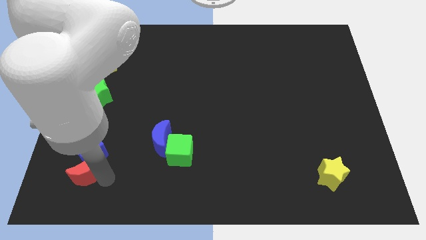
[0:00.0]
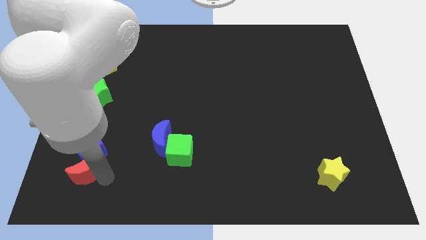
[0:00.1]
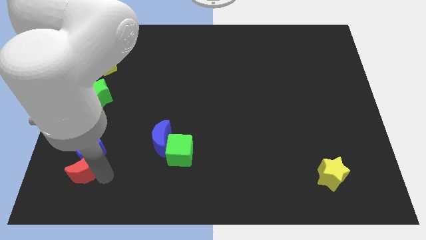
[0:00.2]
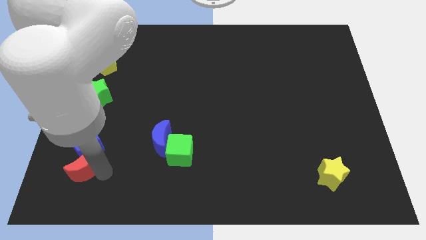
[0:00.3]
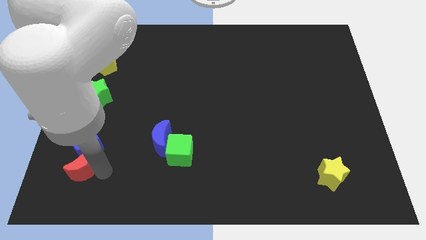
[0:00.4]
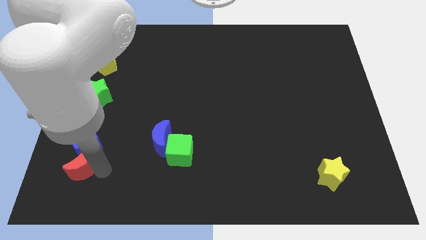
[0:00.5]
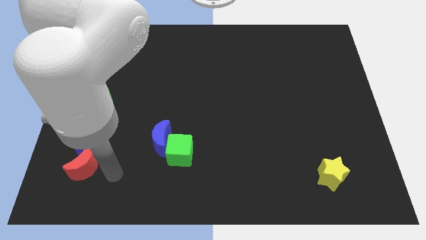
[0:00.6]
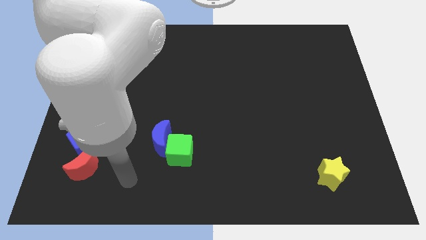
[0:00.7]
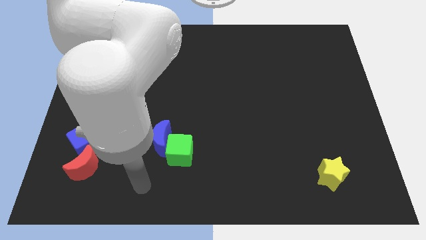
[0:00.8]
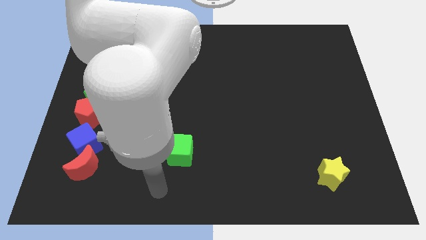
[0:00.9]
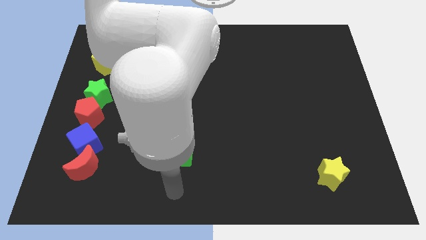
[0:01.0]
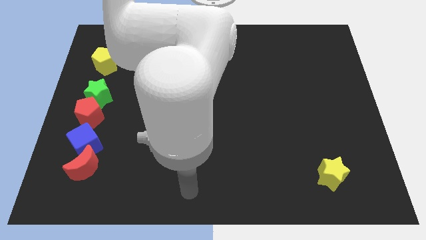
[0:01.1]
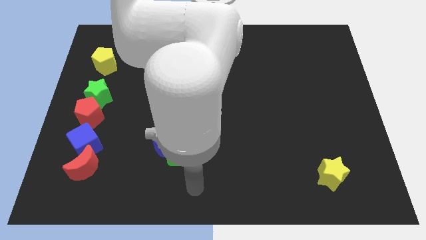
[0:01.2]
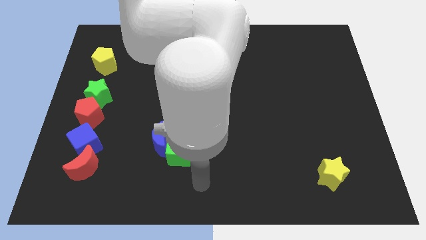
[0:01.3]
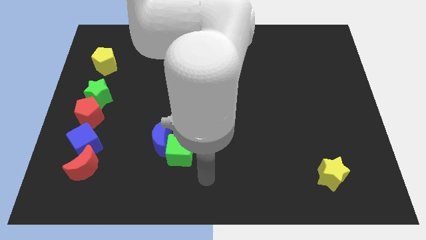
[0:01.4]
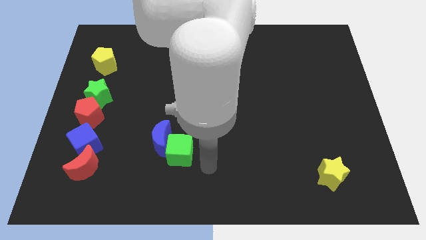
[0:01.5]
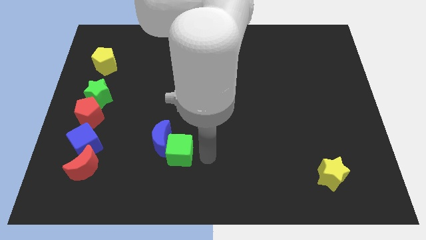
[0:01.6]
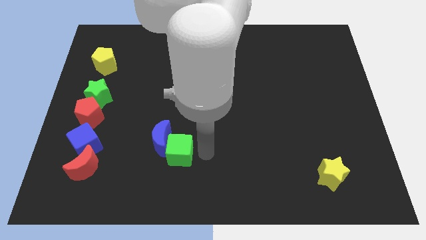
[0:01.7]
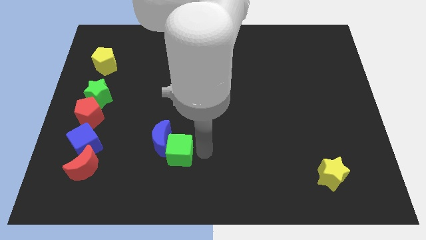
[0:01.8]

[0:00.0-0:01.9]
place the arm to the right of the green cube

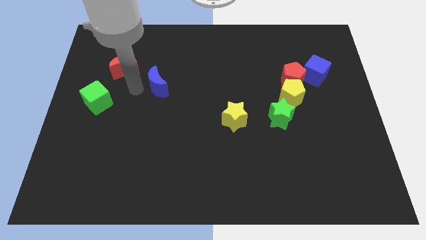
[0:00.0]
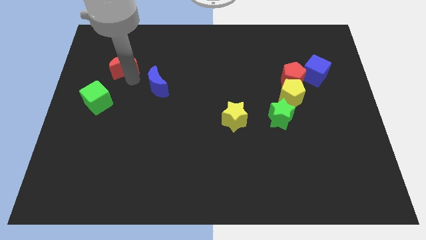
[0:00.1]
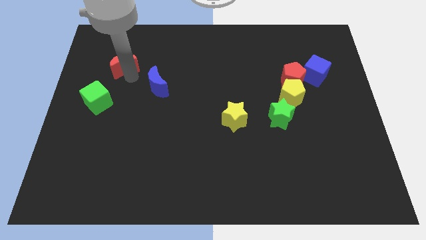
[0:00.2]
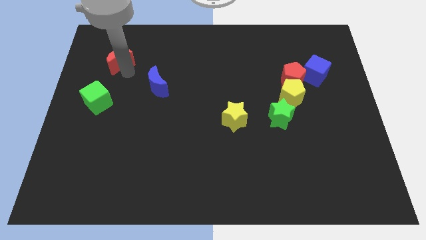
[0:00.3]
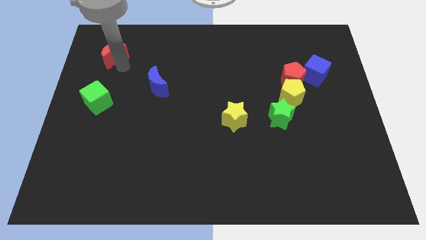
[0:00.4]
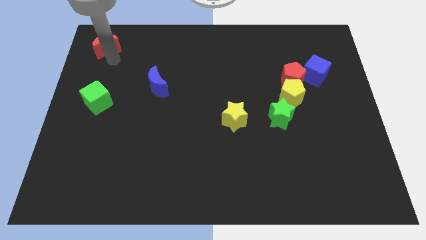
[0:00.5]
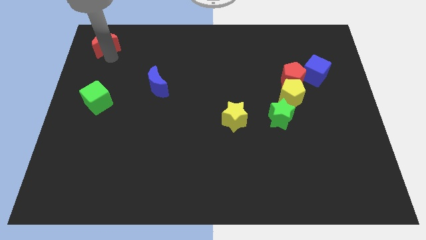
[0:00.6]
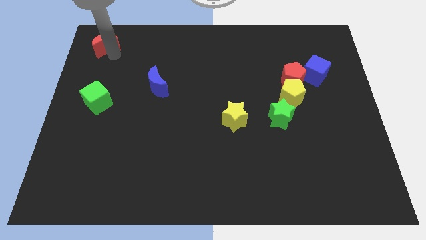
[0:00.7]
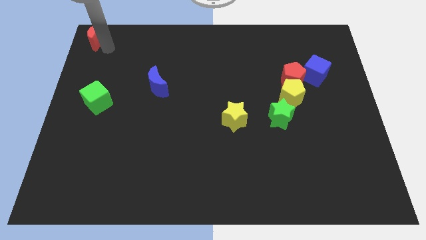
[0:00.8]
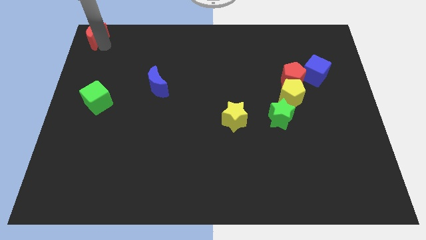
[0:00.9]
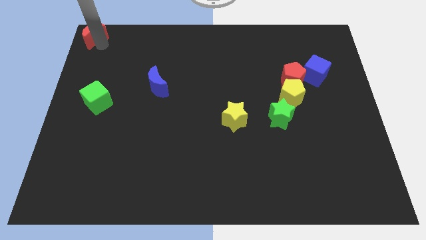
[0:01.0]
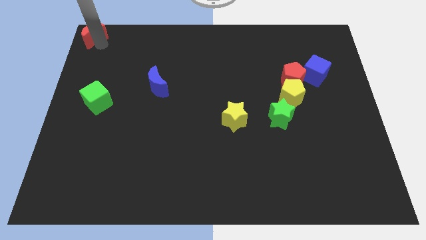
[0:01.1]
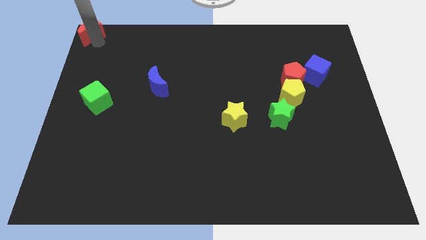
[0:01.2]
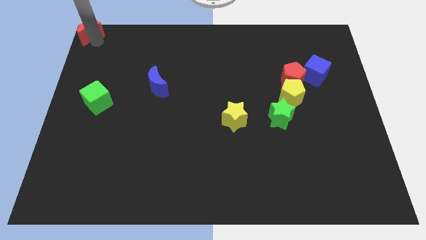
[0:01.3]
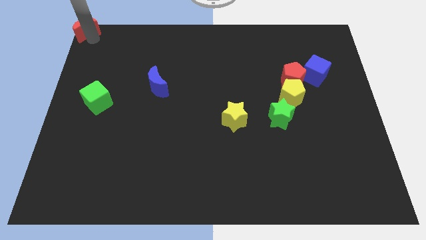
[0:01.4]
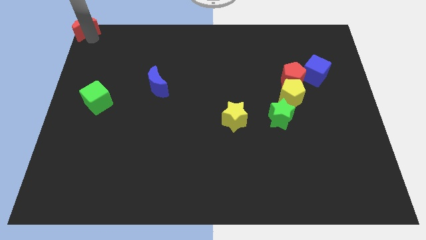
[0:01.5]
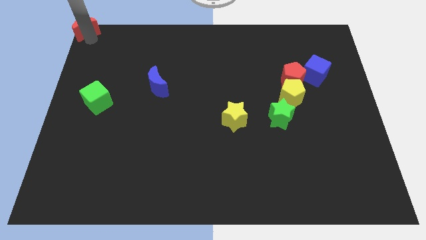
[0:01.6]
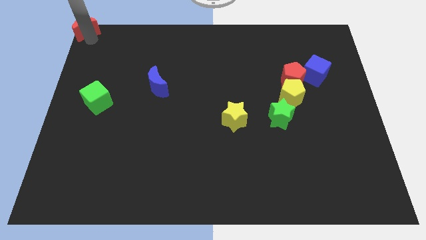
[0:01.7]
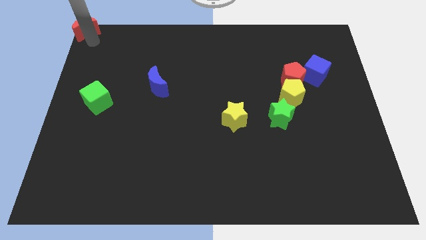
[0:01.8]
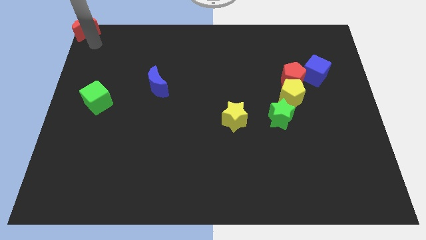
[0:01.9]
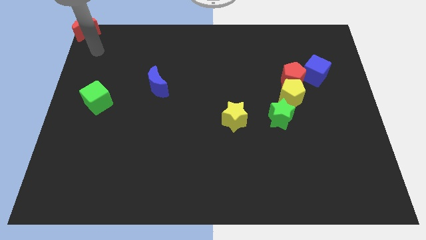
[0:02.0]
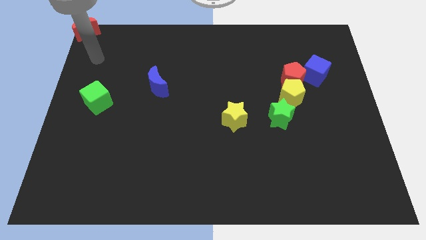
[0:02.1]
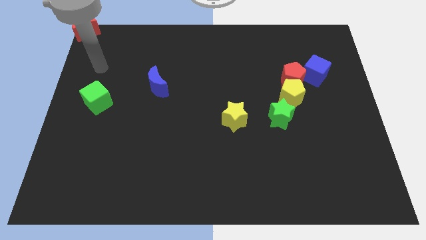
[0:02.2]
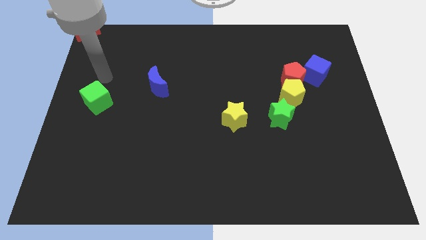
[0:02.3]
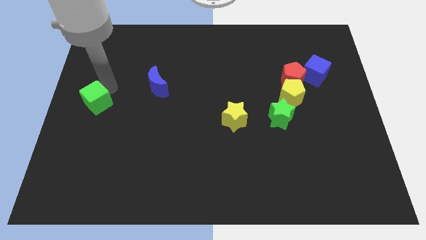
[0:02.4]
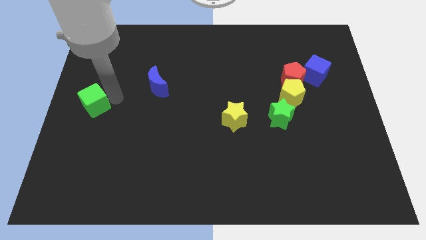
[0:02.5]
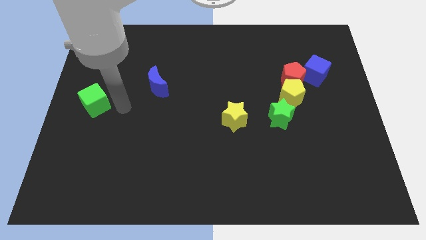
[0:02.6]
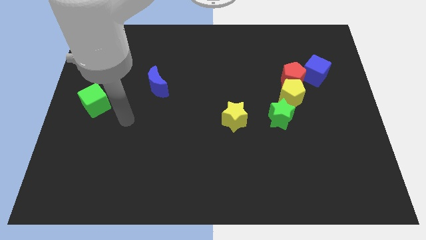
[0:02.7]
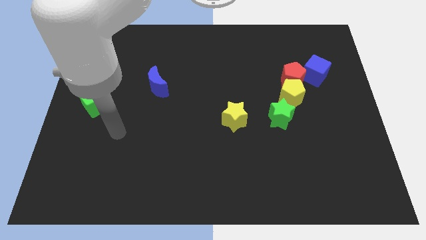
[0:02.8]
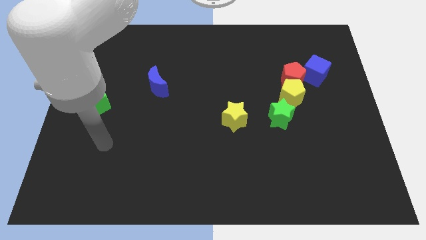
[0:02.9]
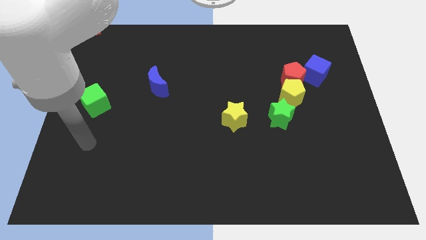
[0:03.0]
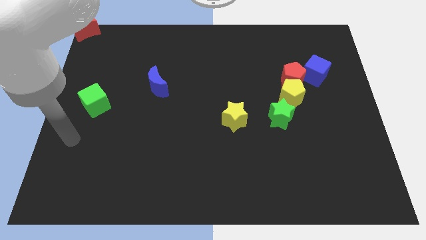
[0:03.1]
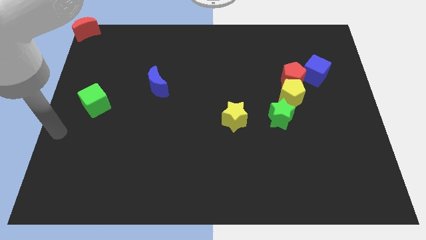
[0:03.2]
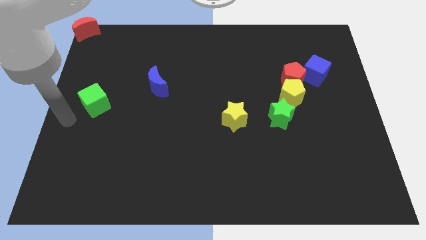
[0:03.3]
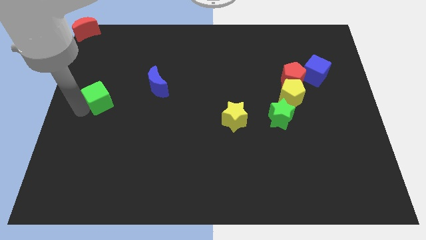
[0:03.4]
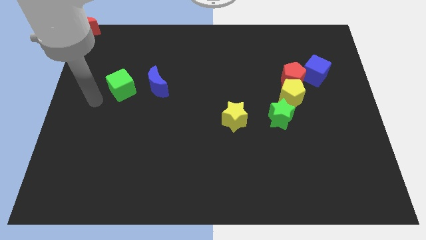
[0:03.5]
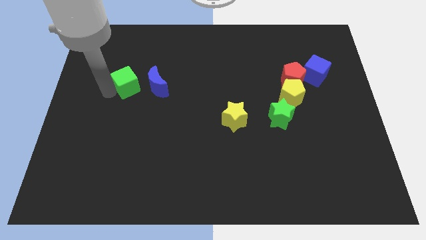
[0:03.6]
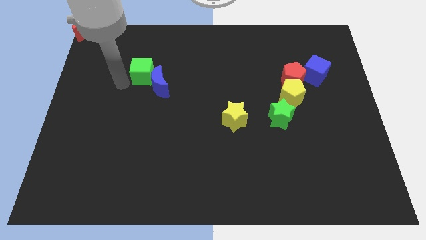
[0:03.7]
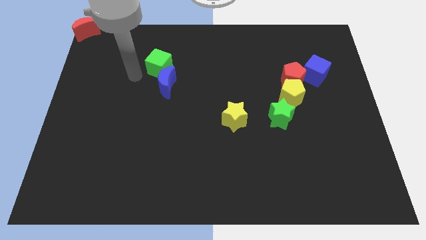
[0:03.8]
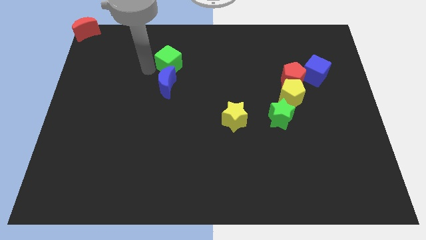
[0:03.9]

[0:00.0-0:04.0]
move the green cube towards the top side of the blue moon

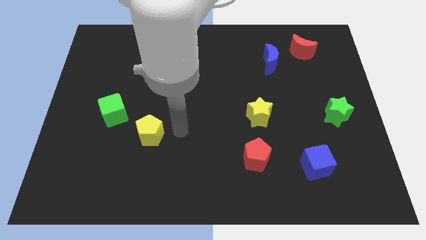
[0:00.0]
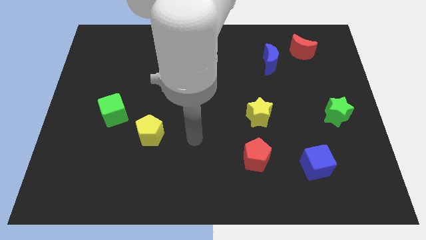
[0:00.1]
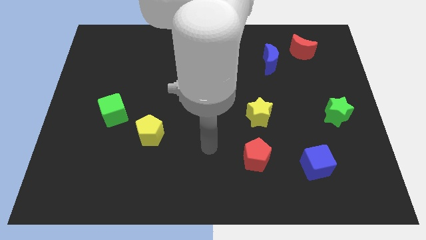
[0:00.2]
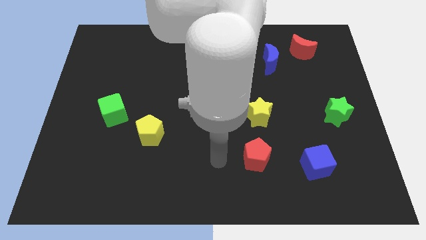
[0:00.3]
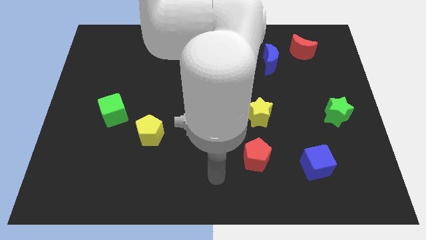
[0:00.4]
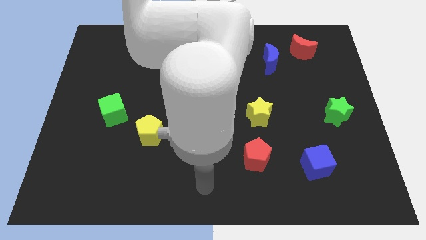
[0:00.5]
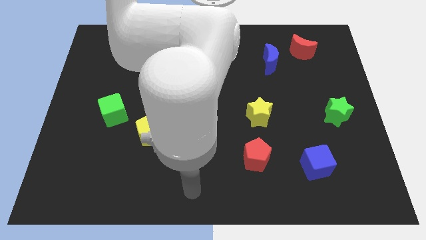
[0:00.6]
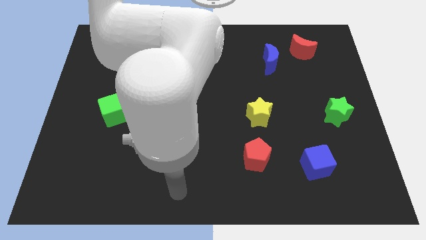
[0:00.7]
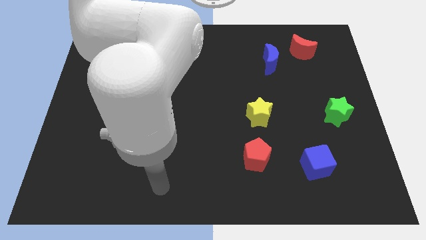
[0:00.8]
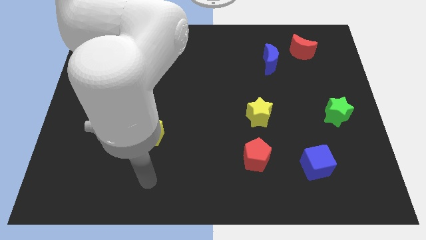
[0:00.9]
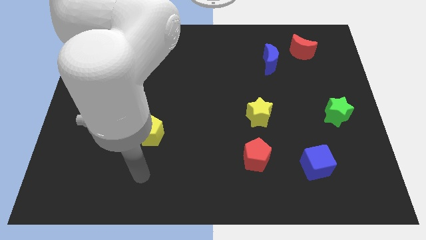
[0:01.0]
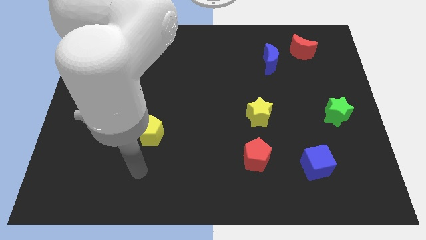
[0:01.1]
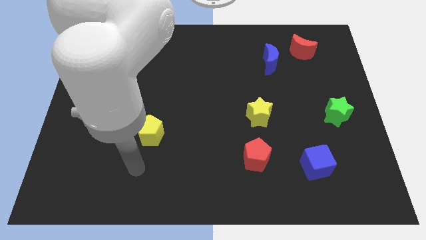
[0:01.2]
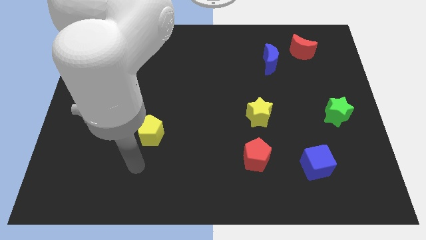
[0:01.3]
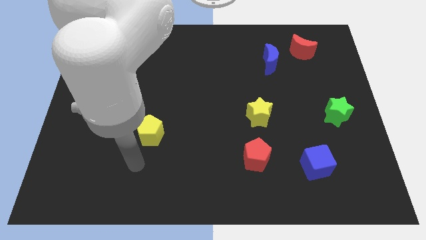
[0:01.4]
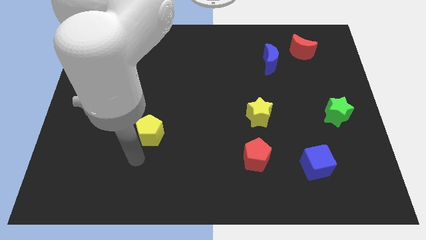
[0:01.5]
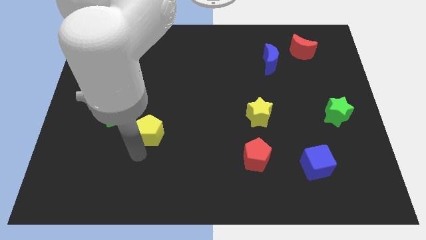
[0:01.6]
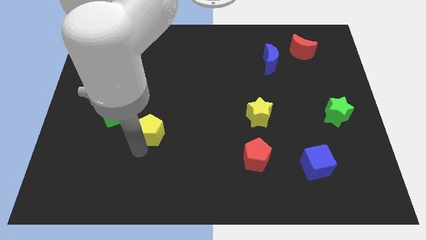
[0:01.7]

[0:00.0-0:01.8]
point your arm at the bottom of the yellow pentagon

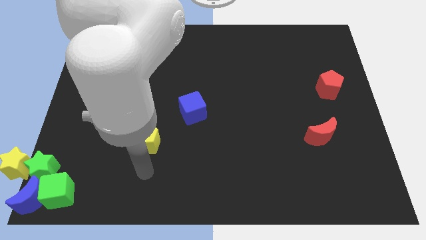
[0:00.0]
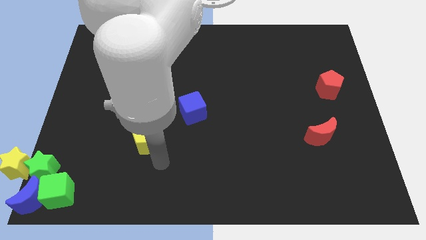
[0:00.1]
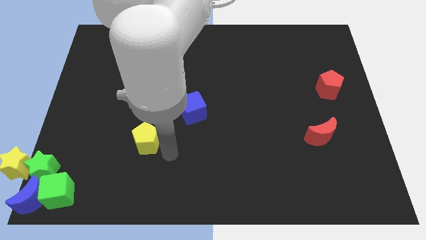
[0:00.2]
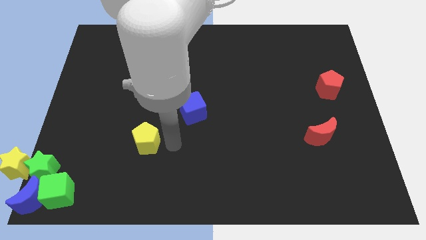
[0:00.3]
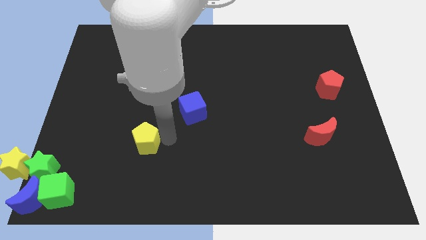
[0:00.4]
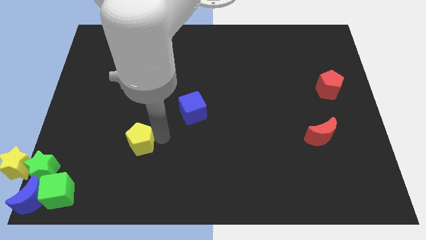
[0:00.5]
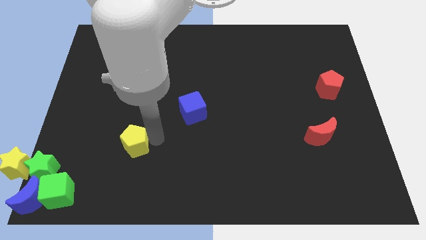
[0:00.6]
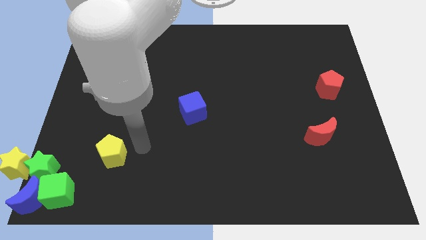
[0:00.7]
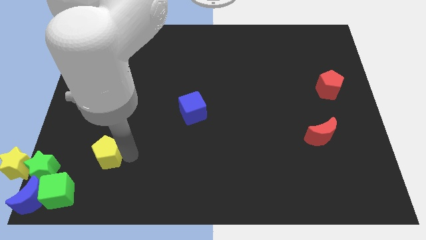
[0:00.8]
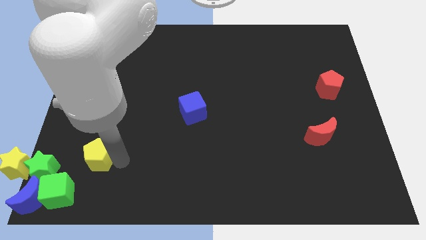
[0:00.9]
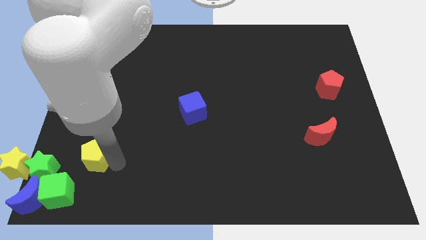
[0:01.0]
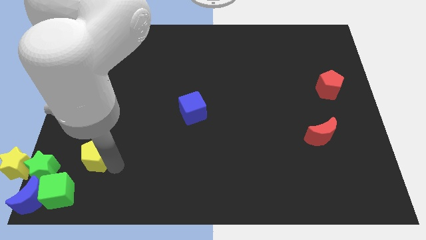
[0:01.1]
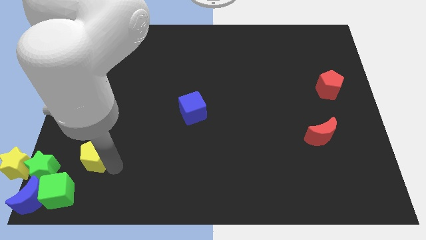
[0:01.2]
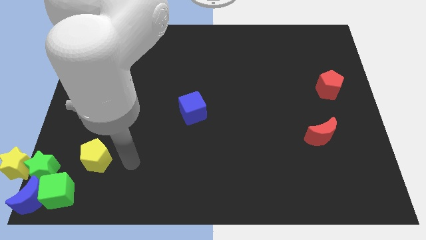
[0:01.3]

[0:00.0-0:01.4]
slide the yellow pentagon towards the bottom left
